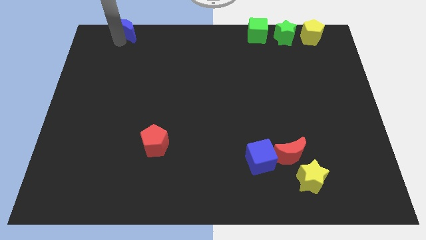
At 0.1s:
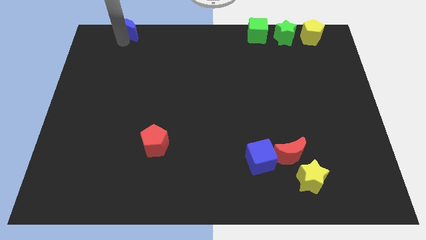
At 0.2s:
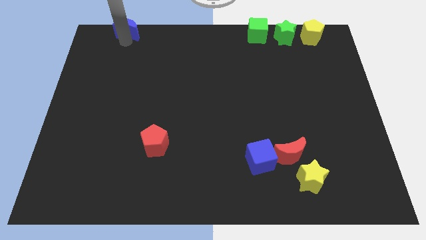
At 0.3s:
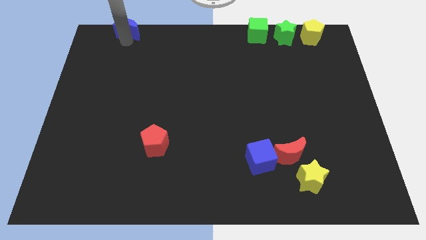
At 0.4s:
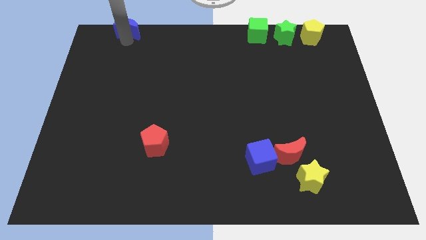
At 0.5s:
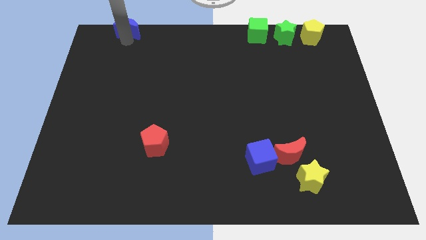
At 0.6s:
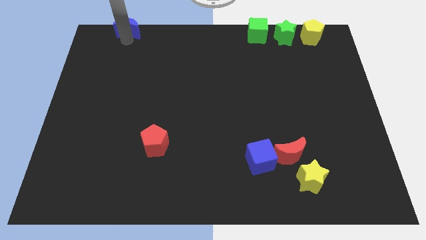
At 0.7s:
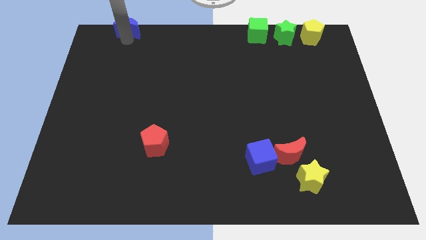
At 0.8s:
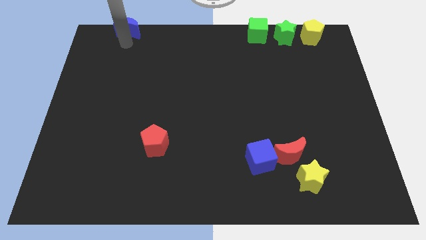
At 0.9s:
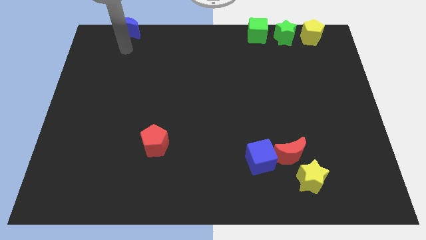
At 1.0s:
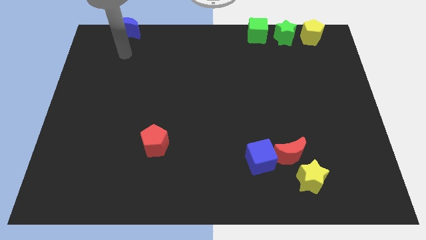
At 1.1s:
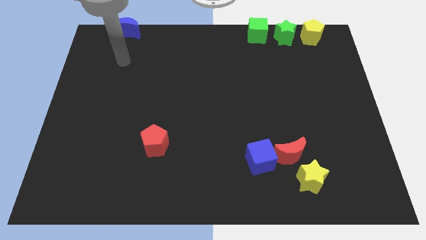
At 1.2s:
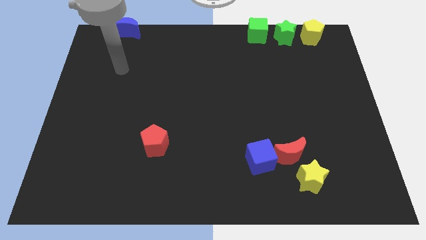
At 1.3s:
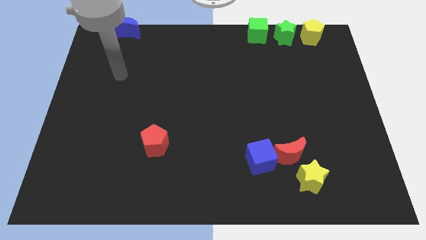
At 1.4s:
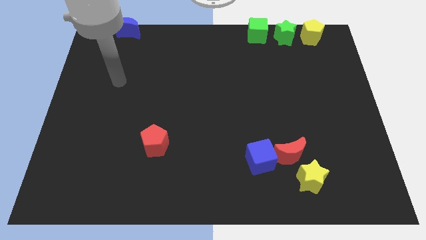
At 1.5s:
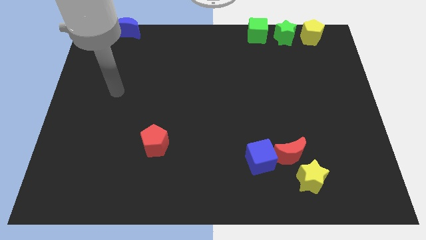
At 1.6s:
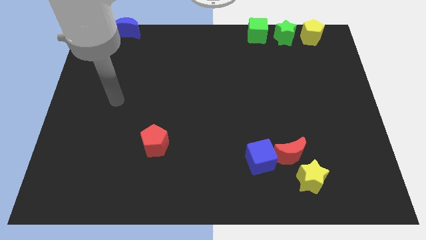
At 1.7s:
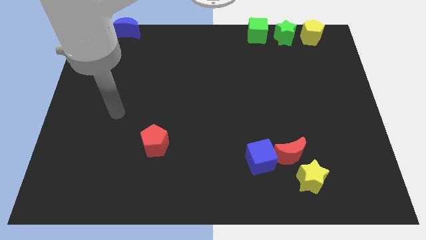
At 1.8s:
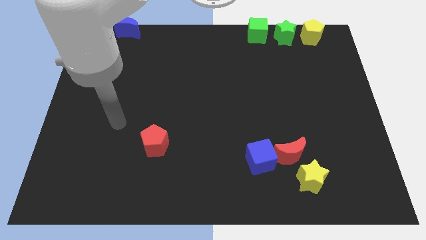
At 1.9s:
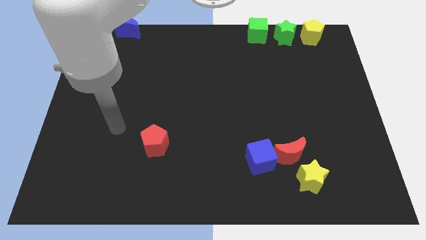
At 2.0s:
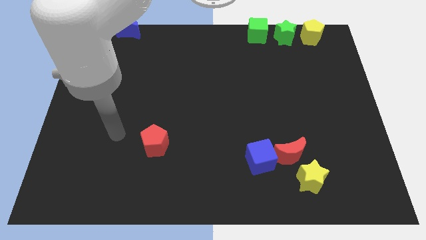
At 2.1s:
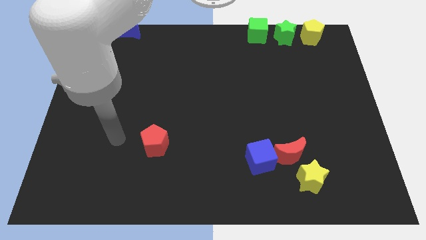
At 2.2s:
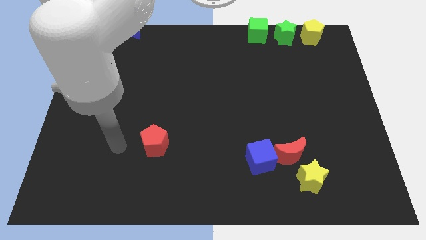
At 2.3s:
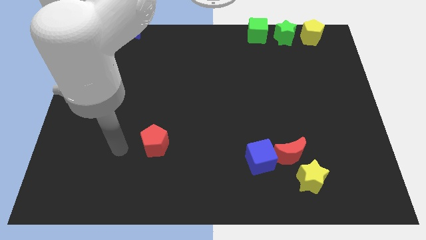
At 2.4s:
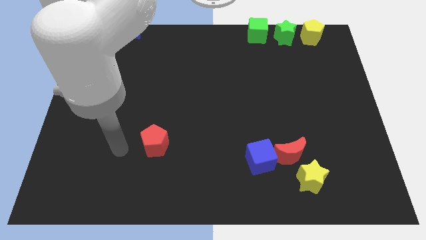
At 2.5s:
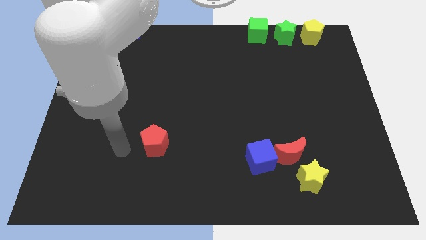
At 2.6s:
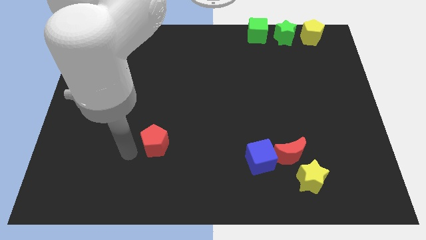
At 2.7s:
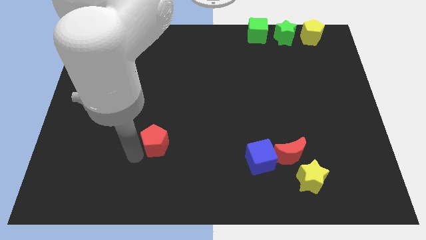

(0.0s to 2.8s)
move your arm away from the blue moon

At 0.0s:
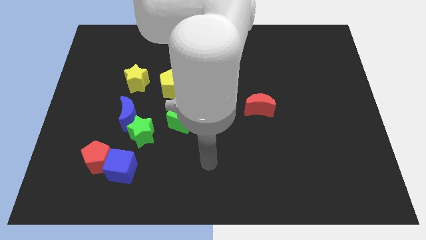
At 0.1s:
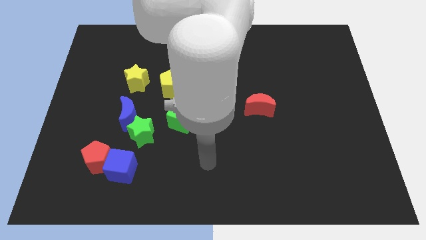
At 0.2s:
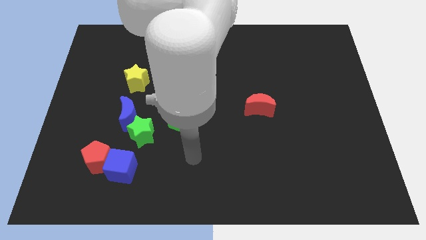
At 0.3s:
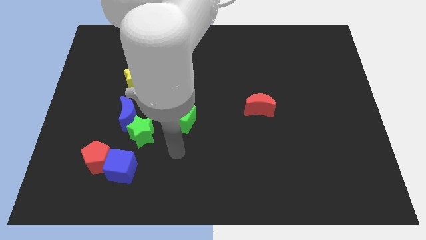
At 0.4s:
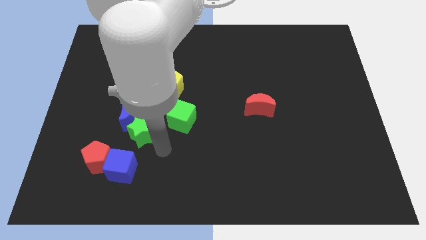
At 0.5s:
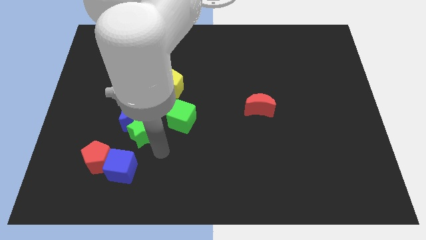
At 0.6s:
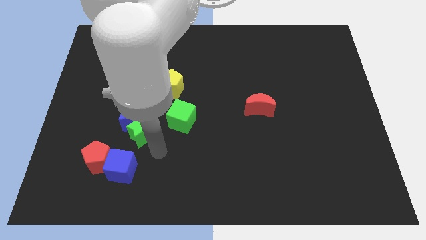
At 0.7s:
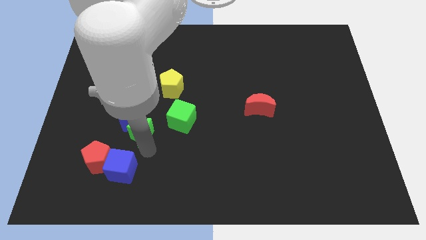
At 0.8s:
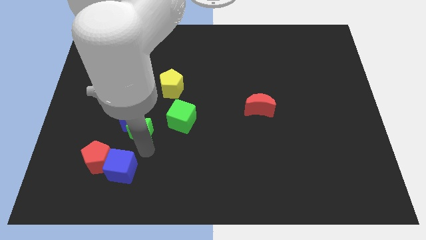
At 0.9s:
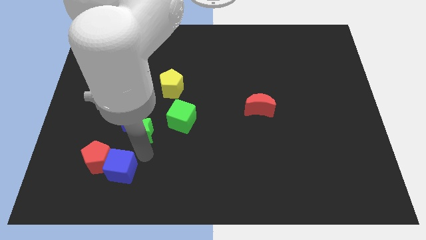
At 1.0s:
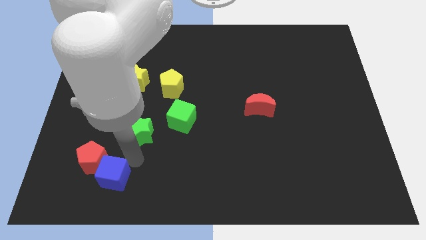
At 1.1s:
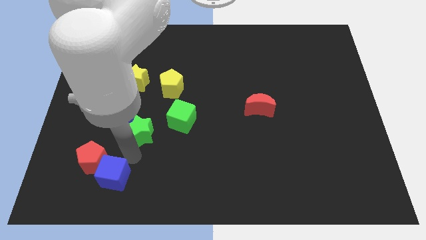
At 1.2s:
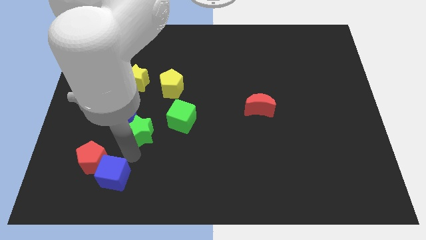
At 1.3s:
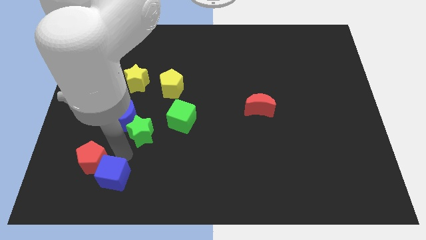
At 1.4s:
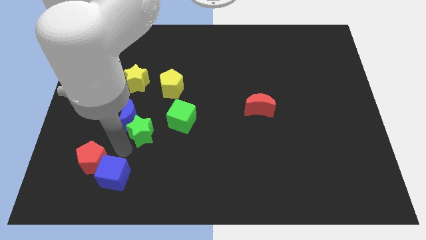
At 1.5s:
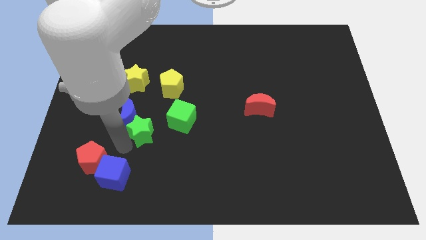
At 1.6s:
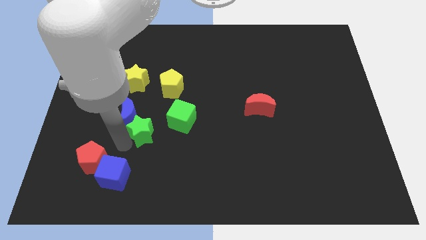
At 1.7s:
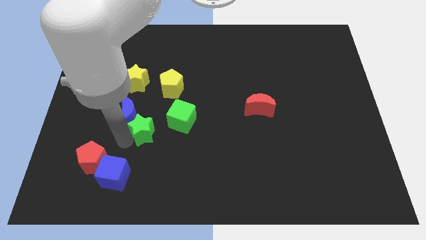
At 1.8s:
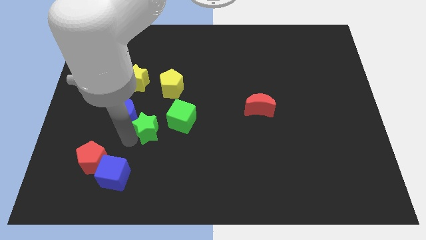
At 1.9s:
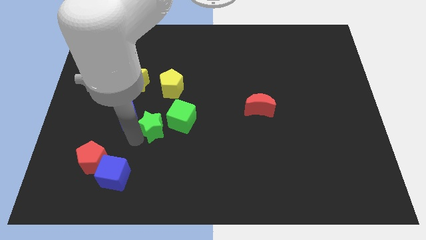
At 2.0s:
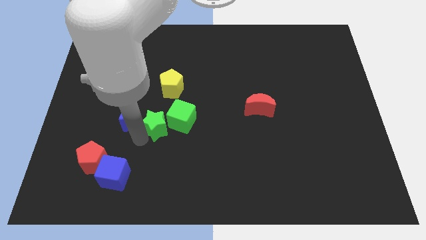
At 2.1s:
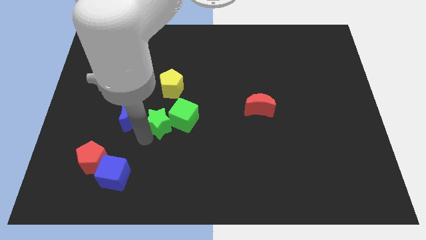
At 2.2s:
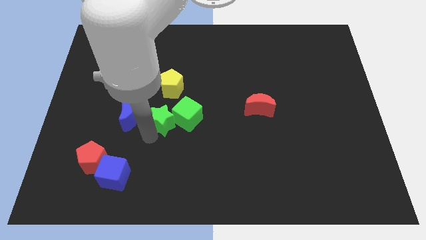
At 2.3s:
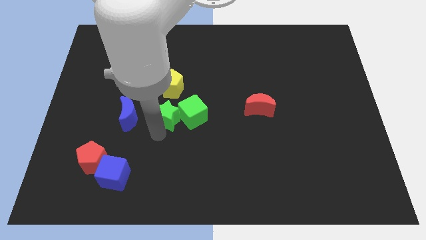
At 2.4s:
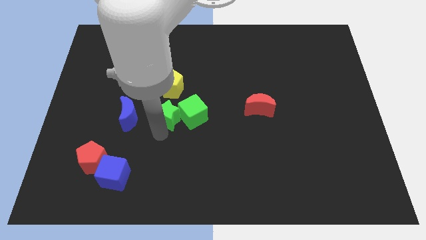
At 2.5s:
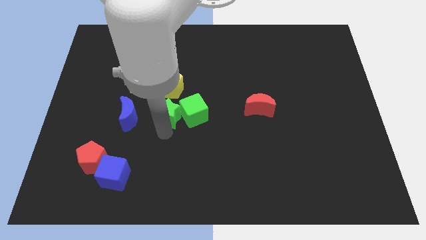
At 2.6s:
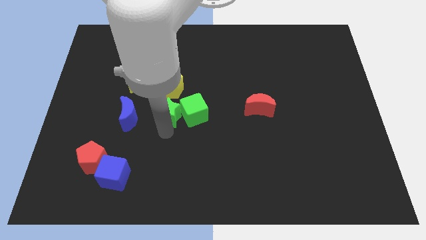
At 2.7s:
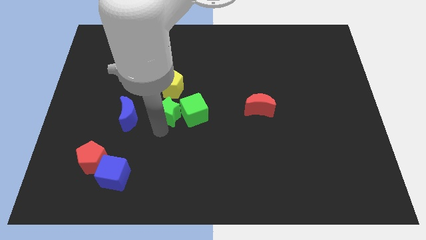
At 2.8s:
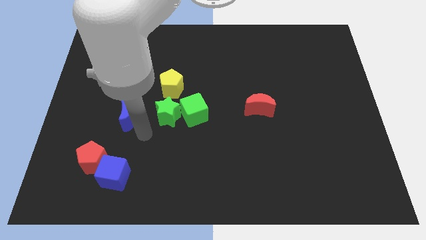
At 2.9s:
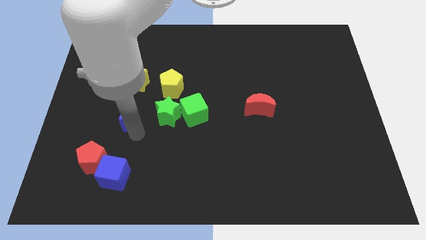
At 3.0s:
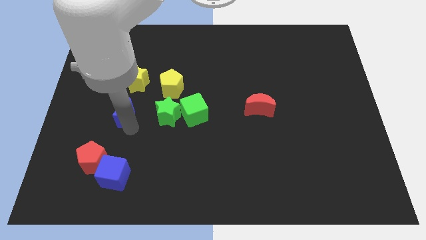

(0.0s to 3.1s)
slide green star into green cube

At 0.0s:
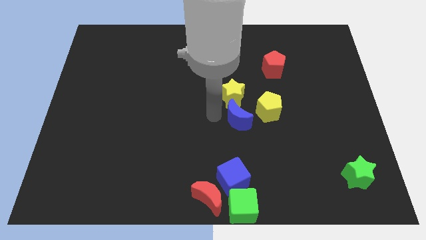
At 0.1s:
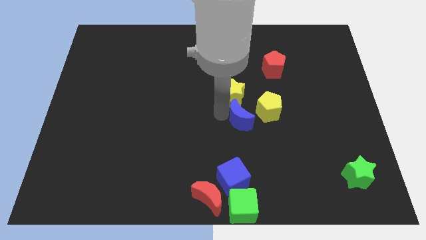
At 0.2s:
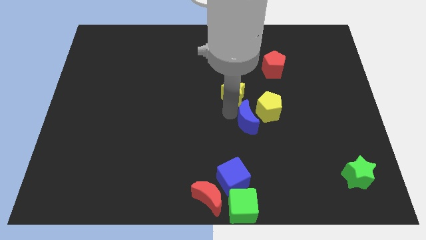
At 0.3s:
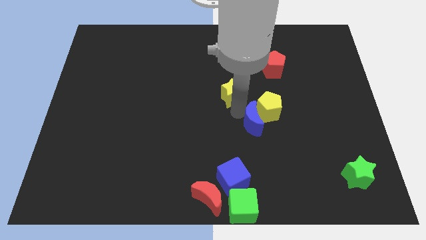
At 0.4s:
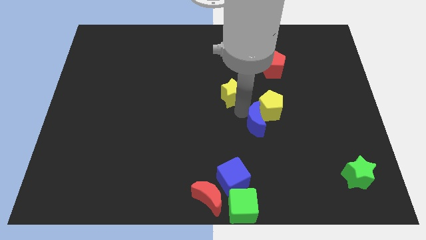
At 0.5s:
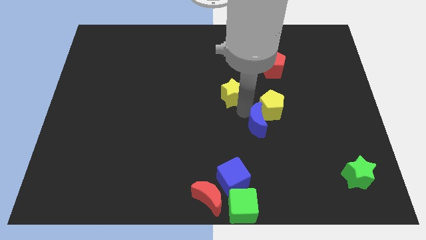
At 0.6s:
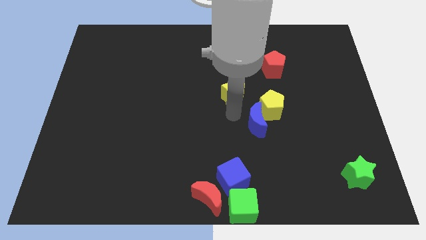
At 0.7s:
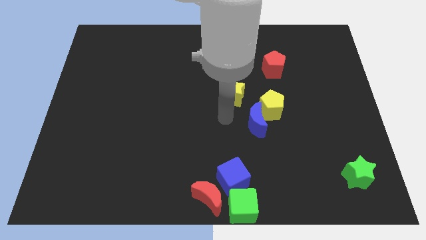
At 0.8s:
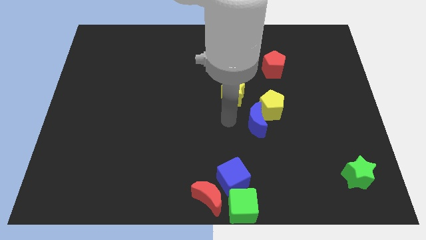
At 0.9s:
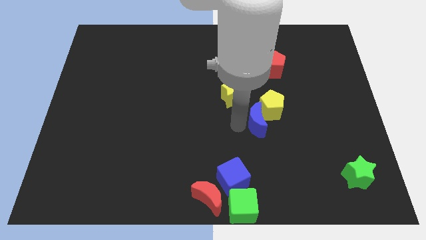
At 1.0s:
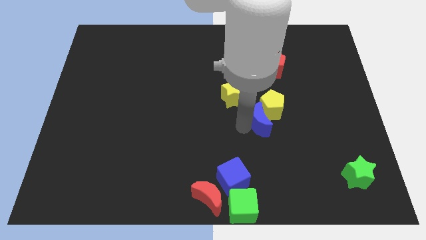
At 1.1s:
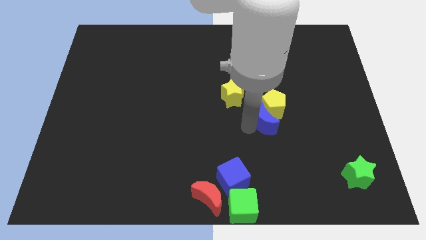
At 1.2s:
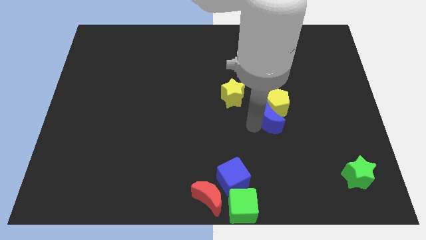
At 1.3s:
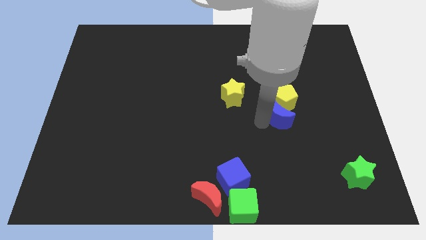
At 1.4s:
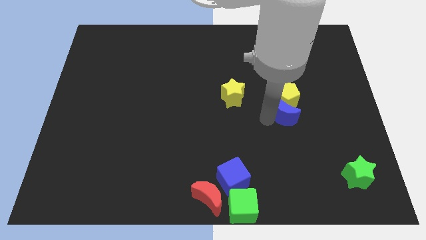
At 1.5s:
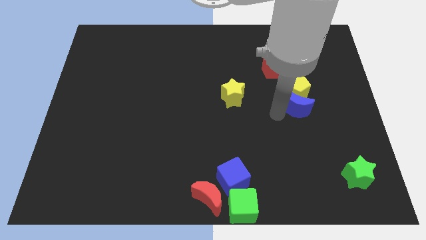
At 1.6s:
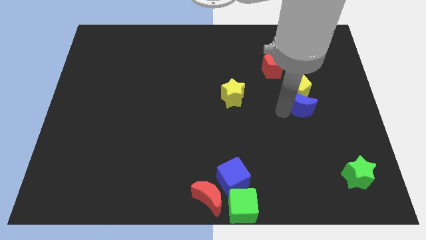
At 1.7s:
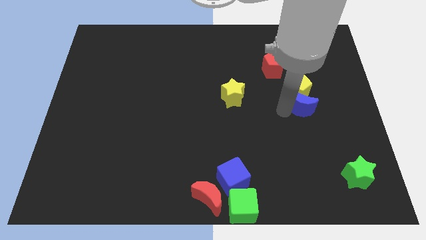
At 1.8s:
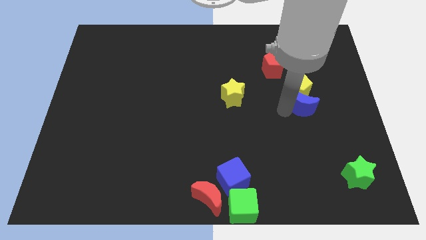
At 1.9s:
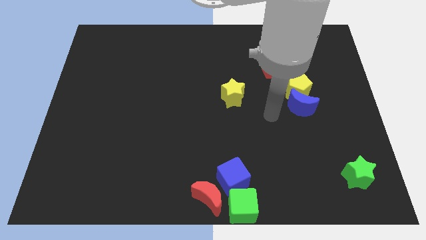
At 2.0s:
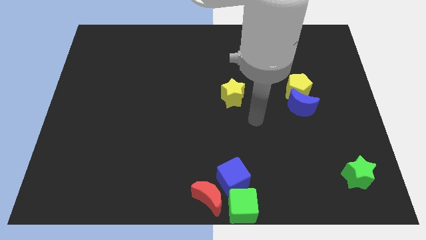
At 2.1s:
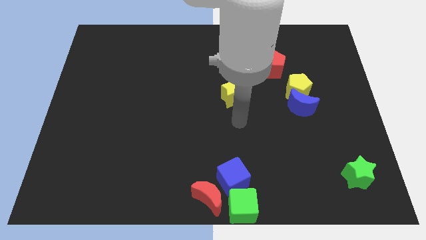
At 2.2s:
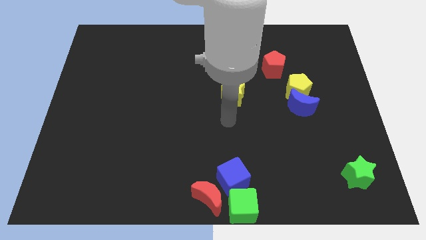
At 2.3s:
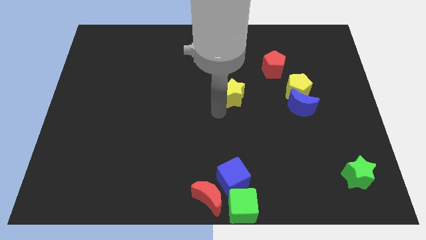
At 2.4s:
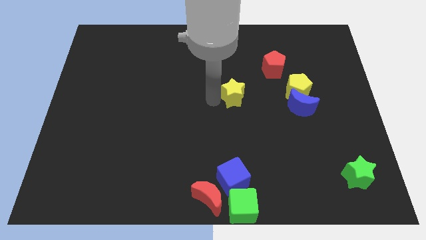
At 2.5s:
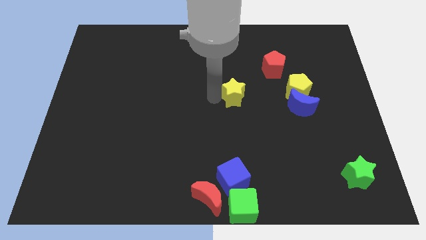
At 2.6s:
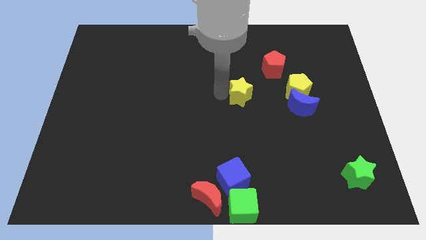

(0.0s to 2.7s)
push the blue crescent into the yellow pentagon

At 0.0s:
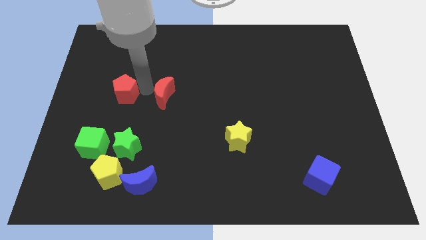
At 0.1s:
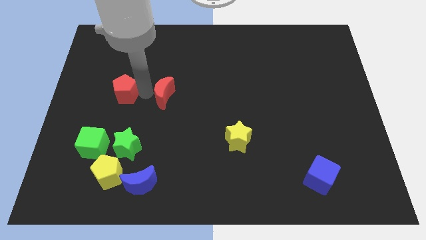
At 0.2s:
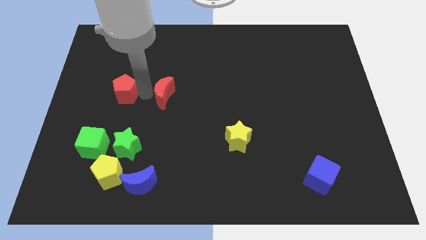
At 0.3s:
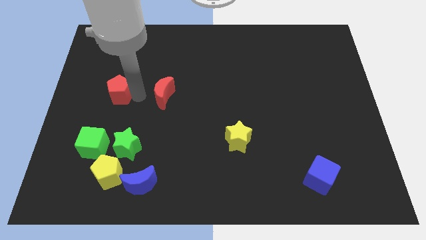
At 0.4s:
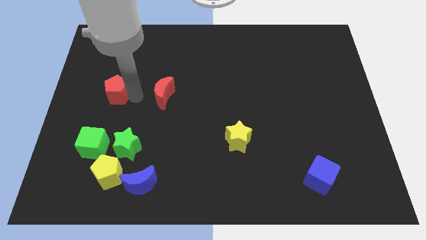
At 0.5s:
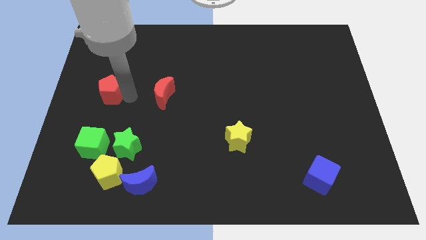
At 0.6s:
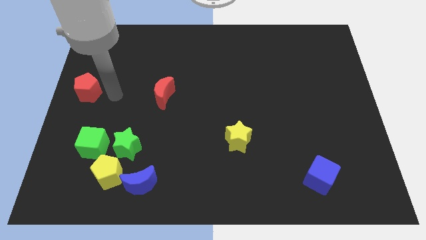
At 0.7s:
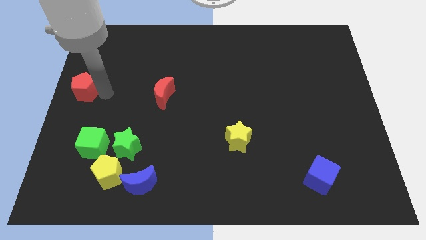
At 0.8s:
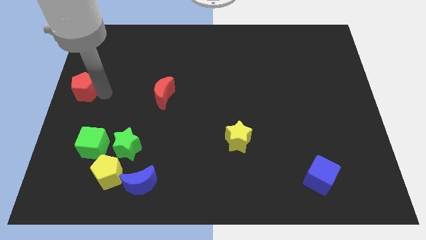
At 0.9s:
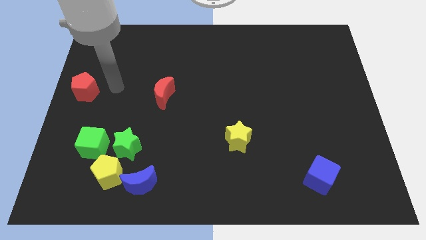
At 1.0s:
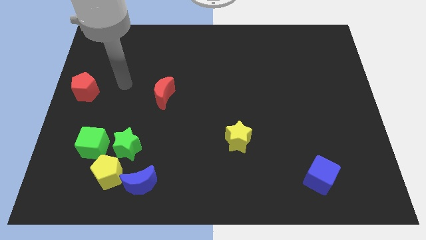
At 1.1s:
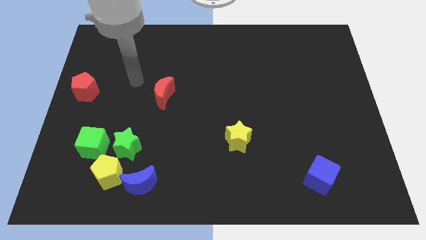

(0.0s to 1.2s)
move the red pentagon to the top of the green cube
